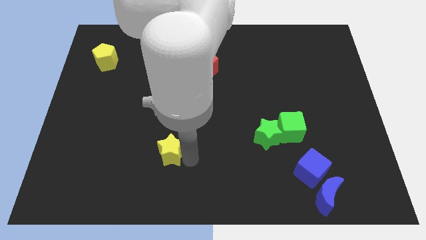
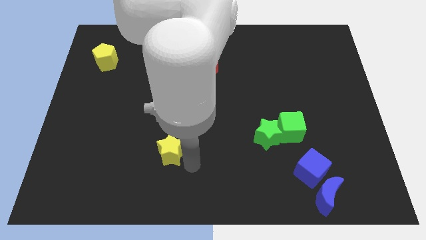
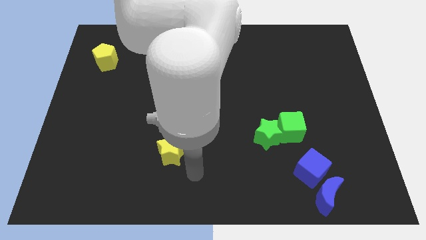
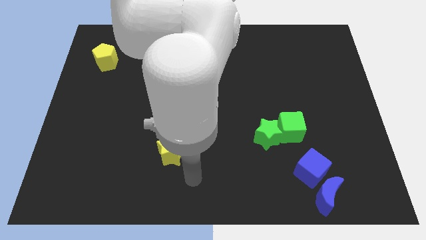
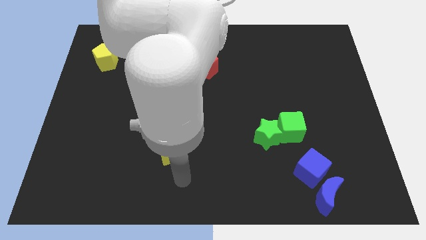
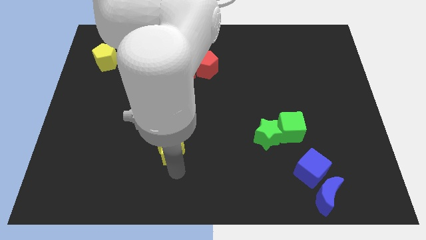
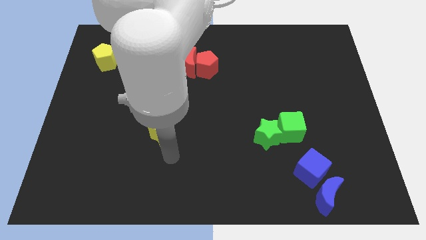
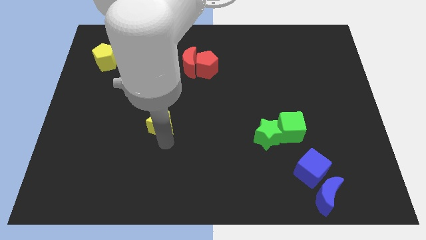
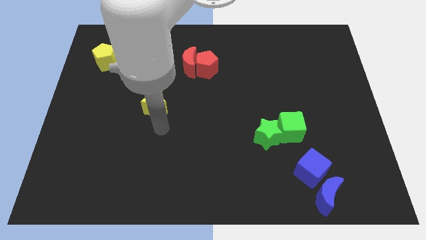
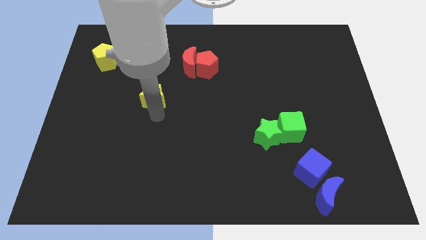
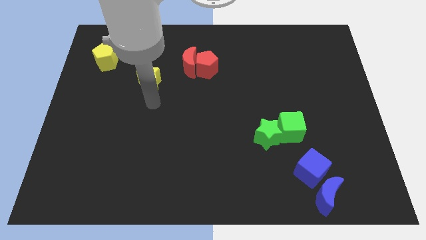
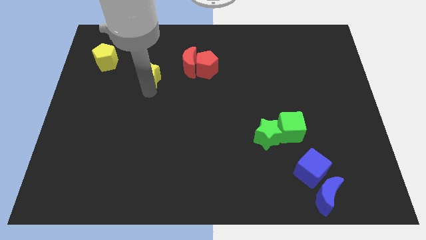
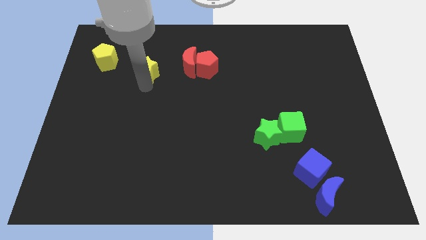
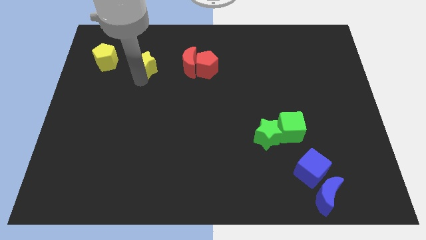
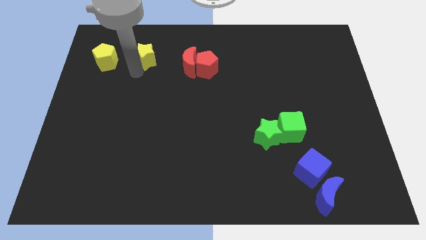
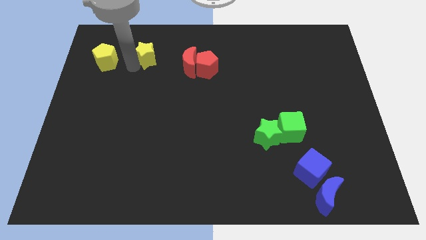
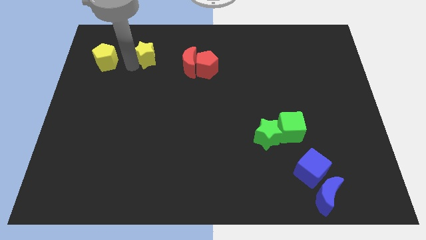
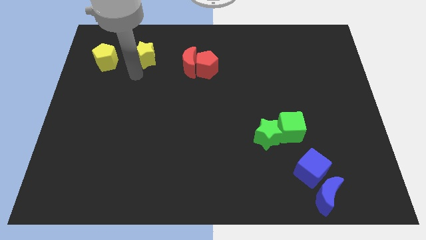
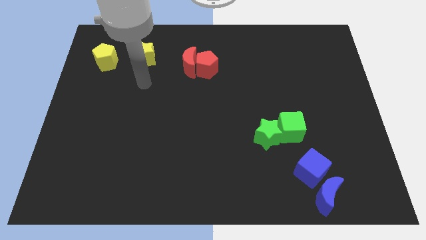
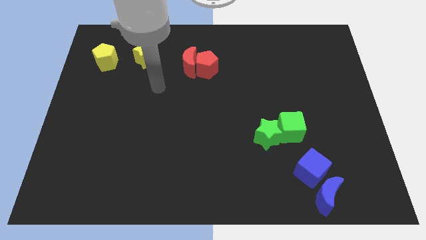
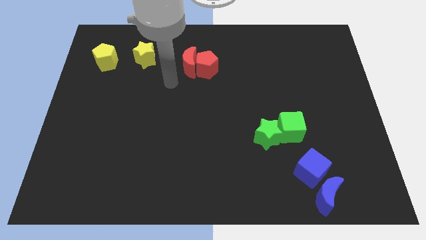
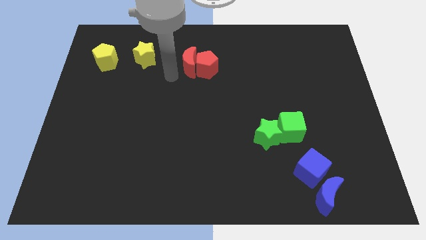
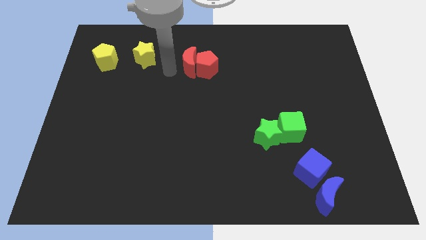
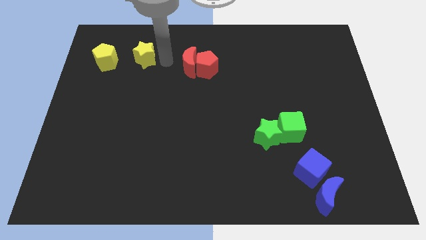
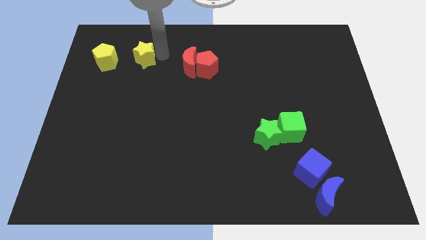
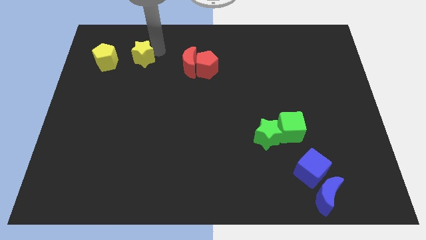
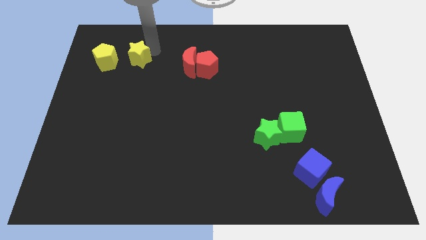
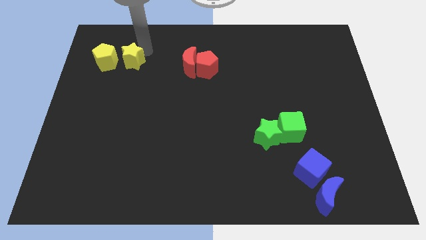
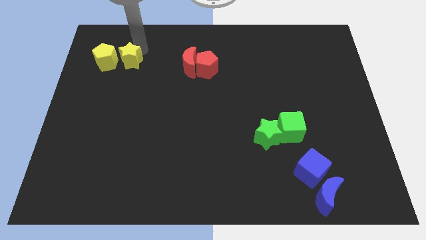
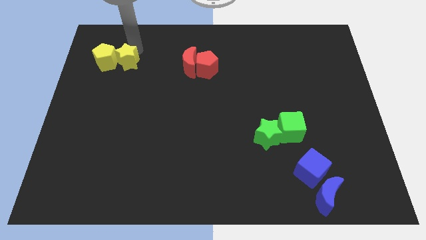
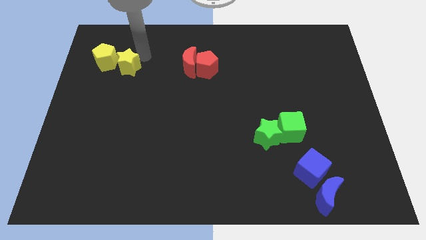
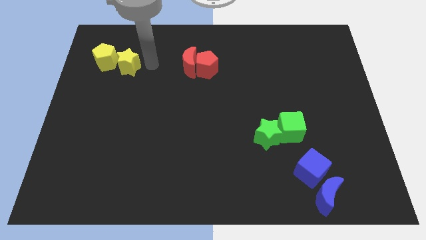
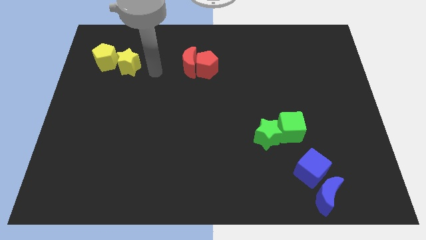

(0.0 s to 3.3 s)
slide the yellow star towards the yellow pentagon

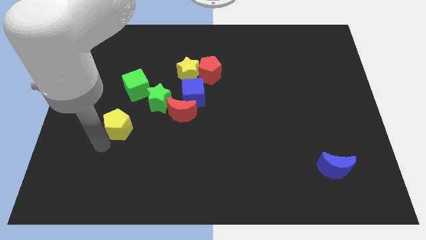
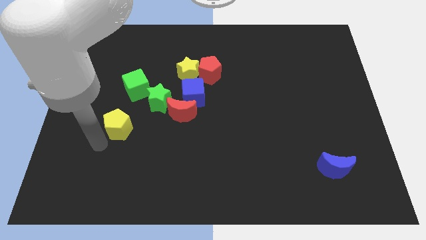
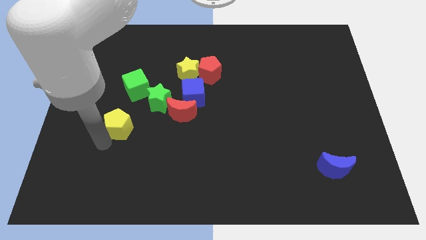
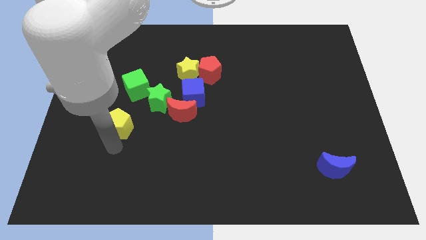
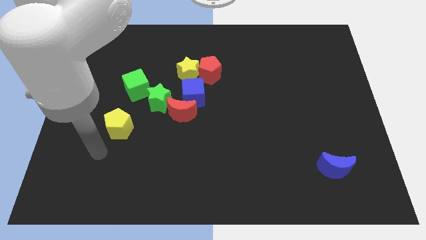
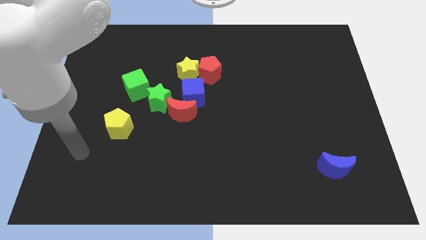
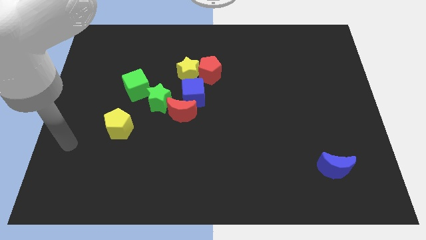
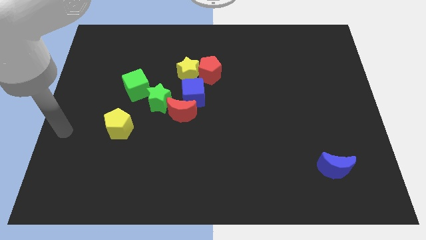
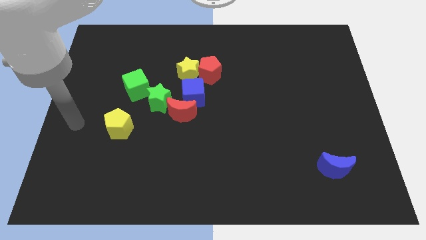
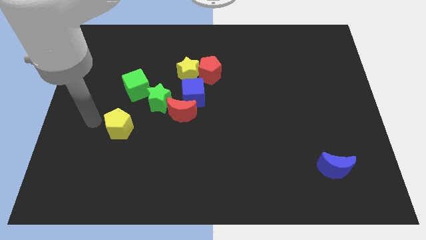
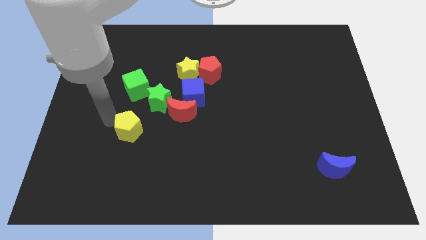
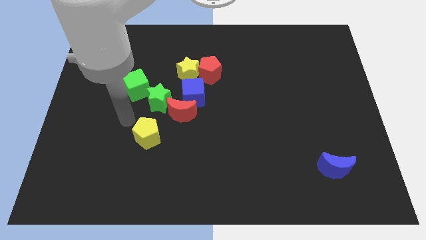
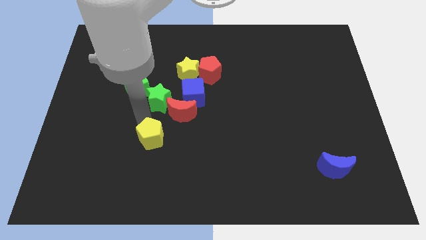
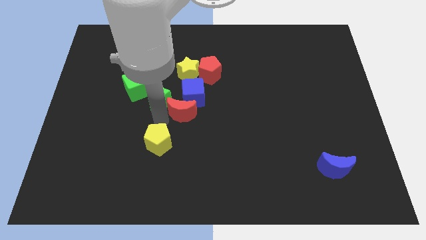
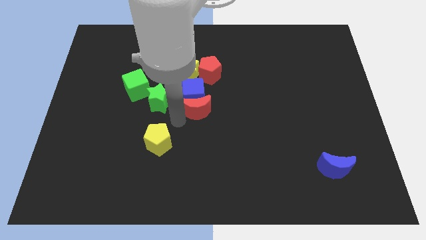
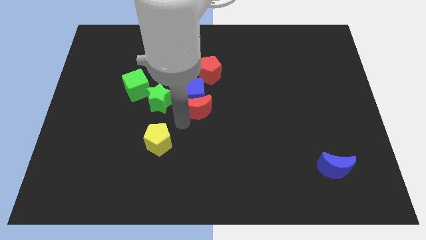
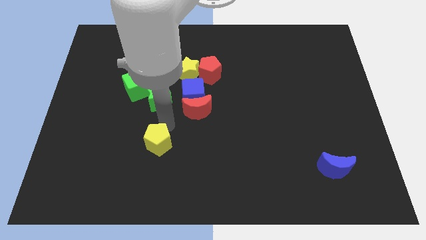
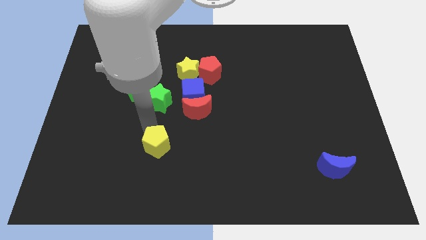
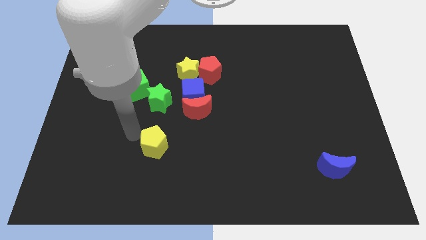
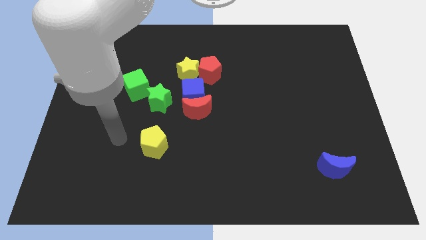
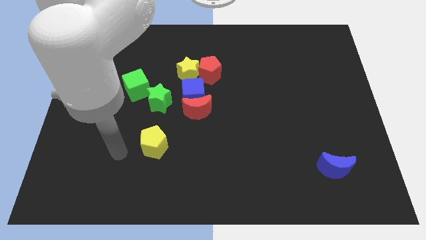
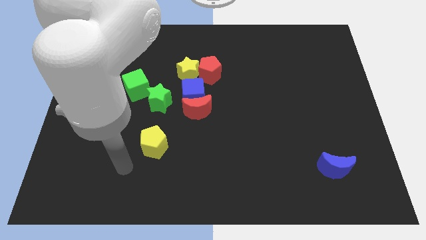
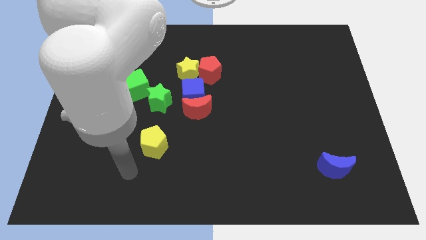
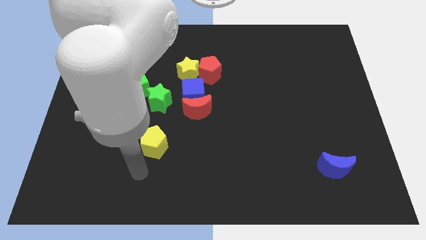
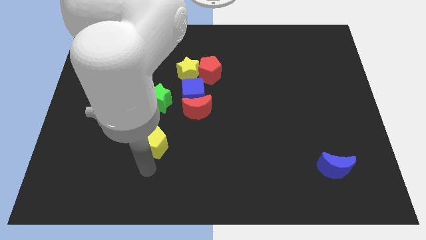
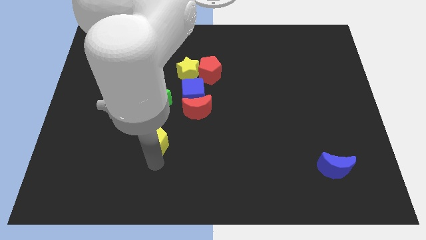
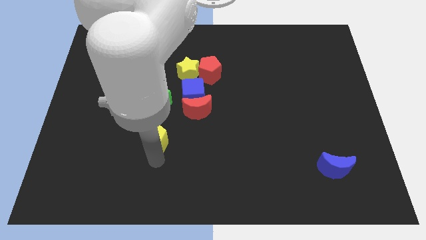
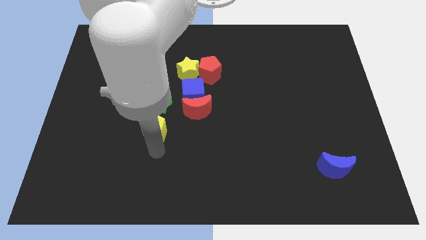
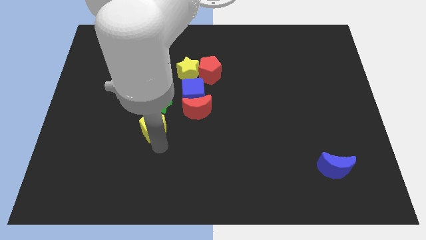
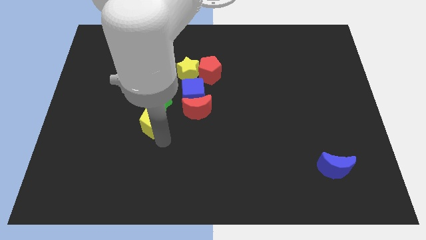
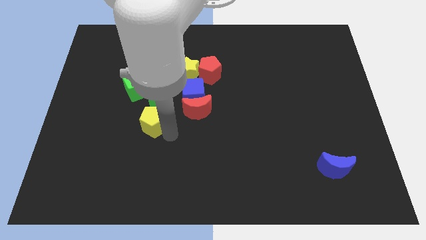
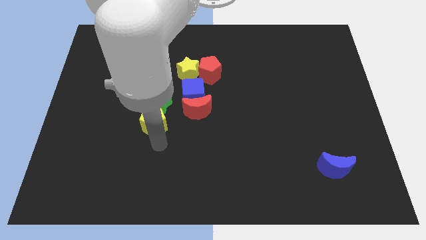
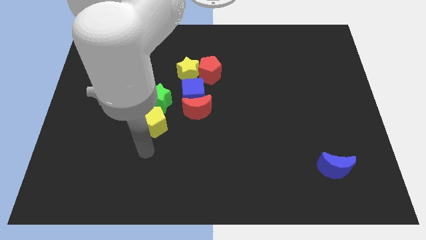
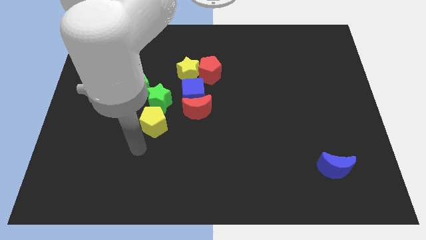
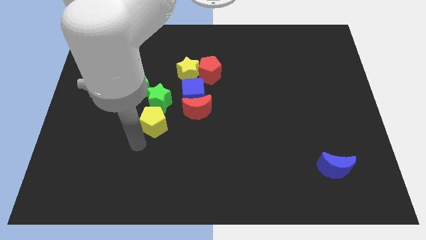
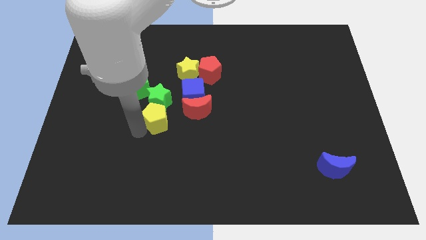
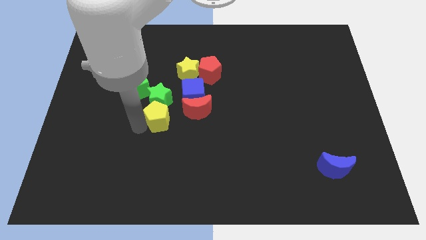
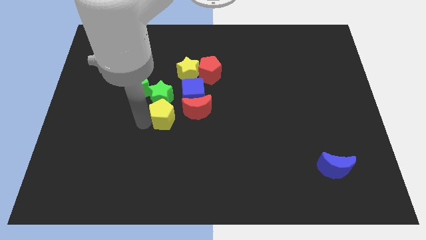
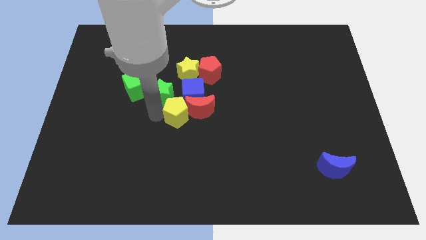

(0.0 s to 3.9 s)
move the yellow pentagon into the green star

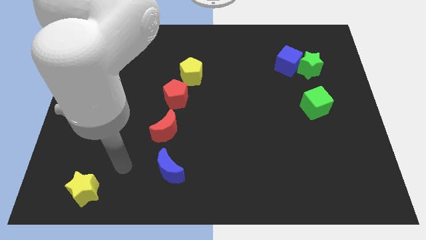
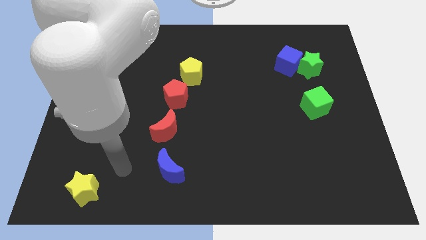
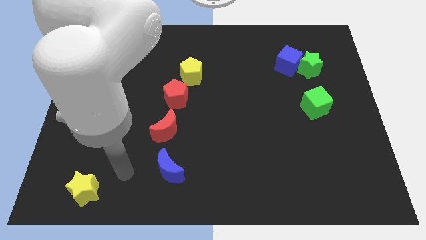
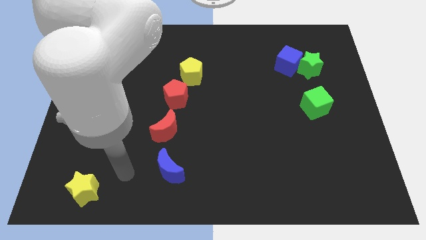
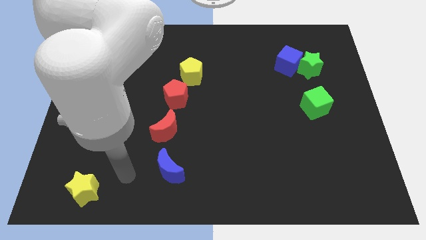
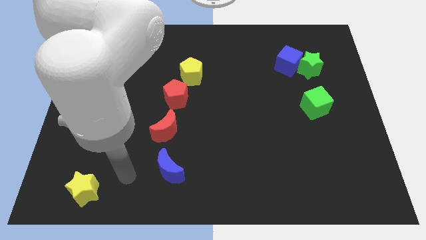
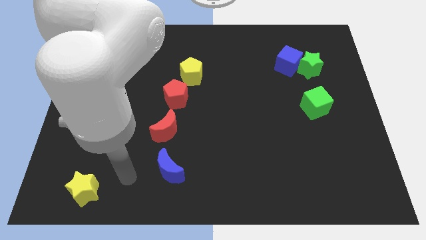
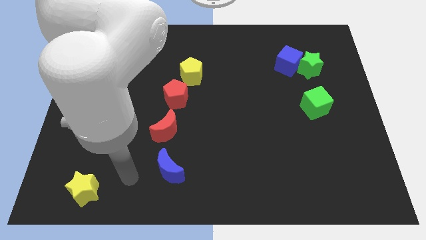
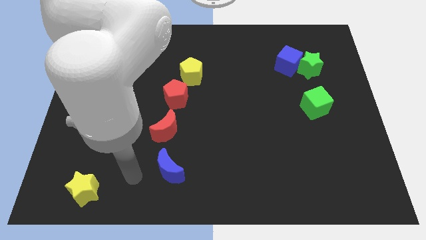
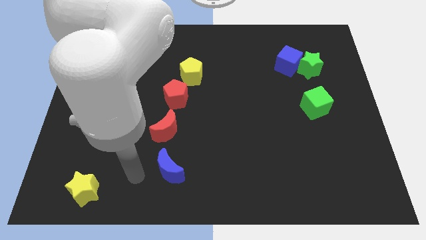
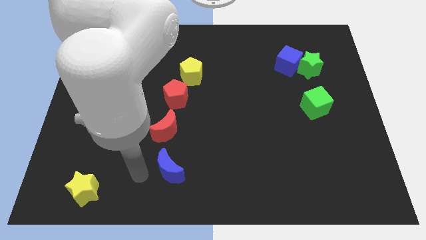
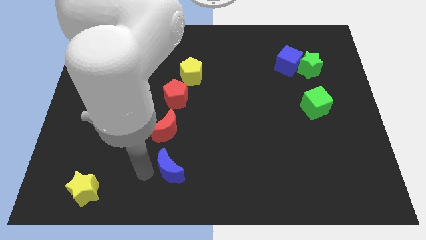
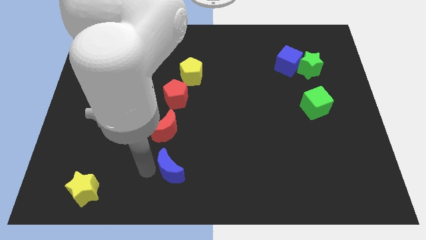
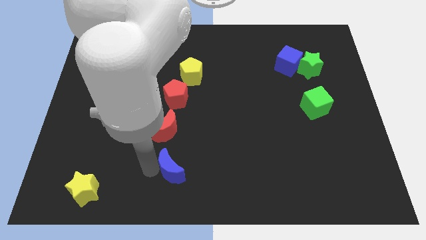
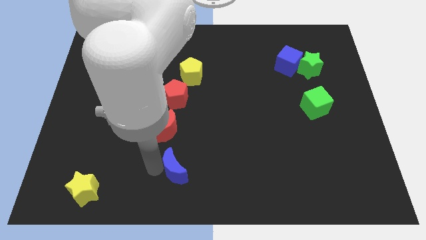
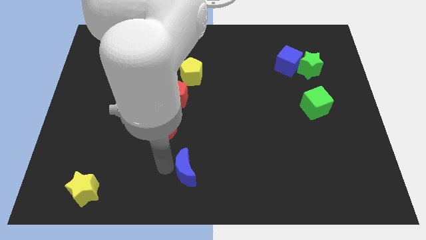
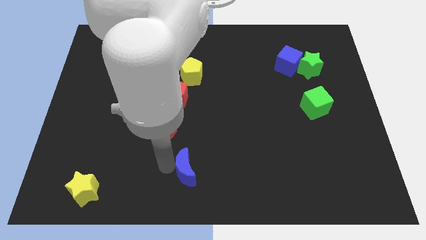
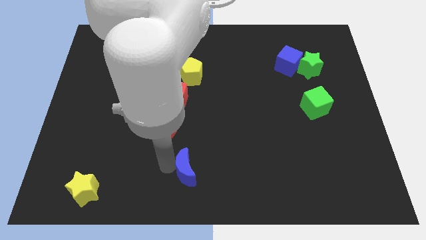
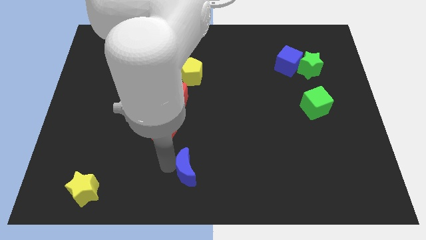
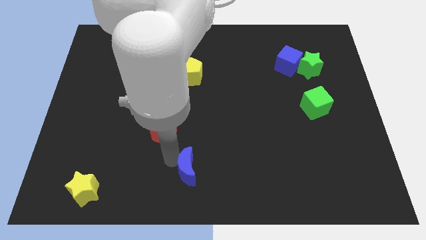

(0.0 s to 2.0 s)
move the blue moon towards the right
